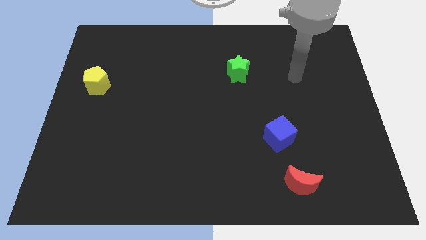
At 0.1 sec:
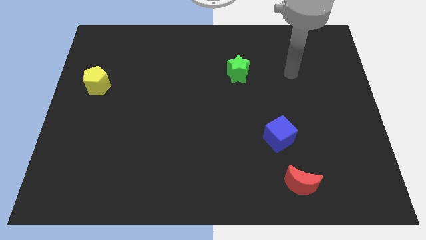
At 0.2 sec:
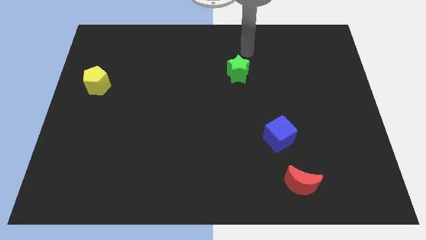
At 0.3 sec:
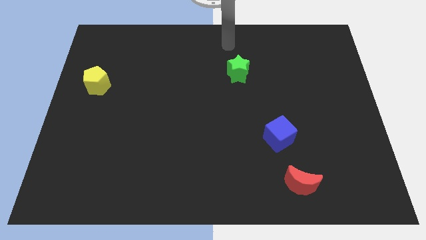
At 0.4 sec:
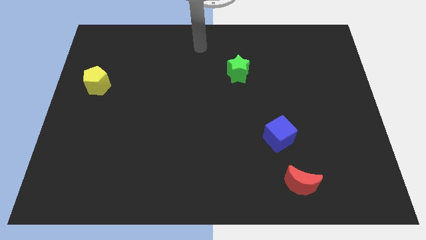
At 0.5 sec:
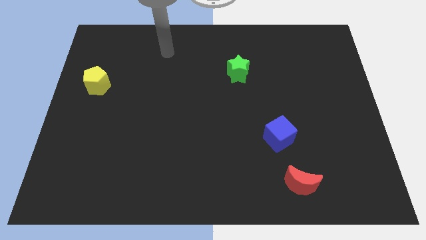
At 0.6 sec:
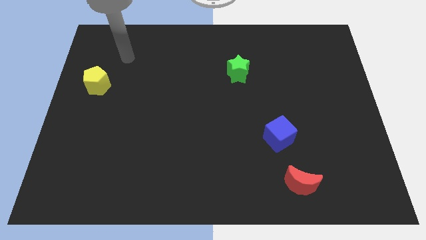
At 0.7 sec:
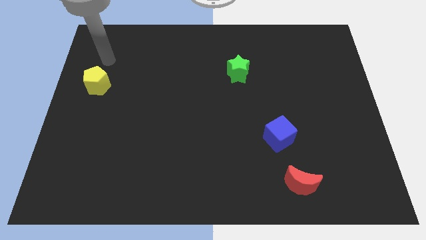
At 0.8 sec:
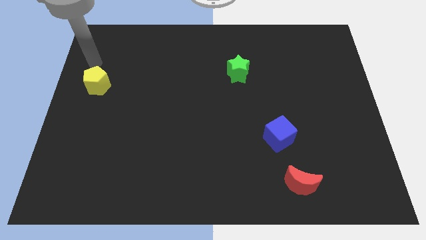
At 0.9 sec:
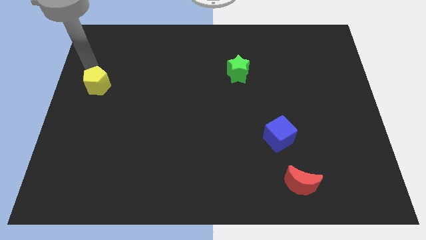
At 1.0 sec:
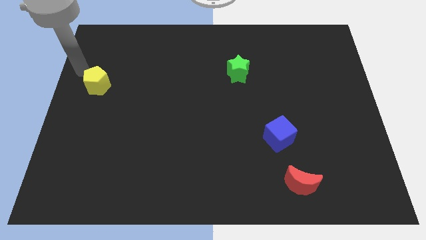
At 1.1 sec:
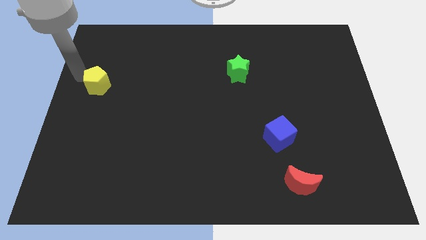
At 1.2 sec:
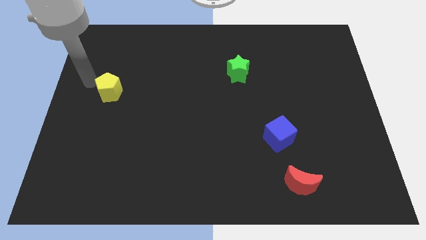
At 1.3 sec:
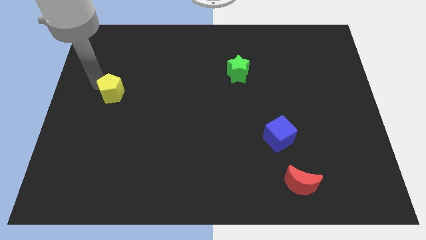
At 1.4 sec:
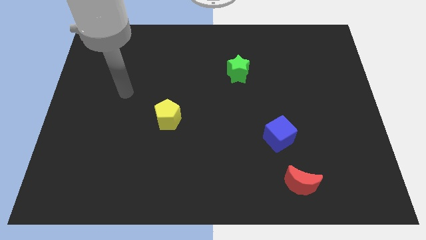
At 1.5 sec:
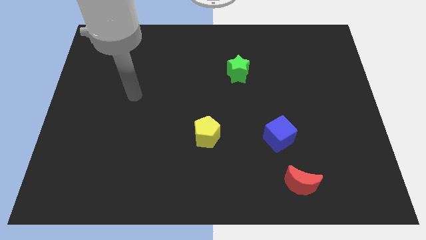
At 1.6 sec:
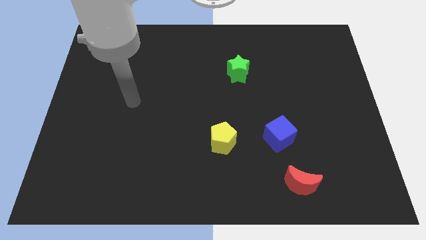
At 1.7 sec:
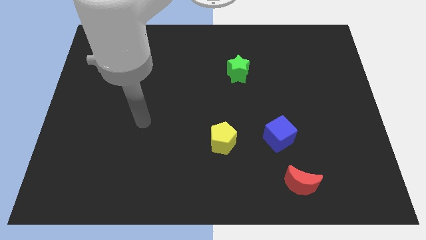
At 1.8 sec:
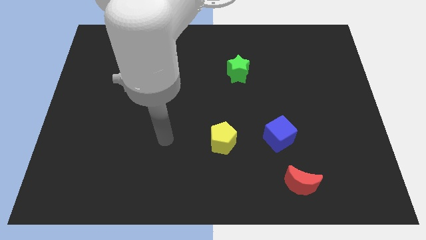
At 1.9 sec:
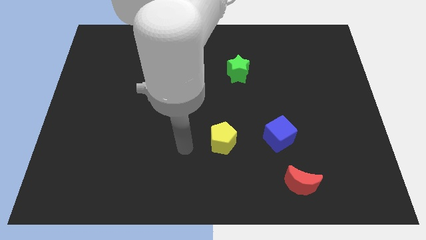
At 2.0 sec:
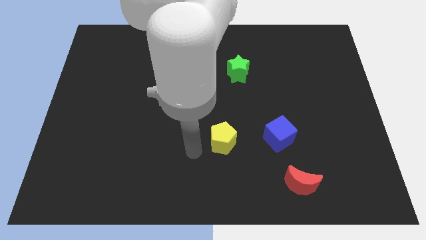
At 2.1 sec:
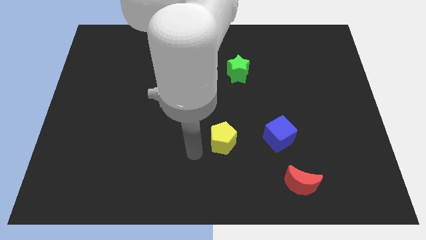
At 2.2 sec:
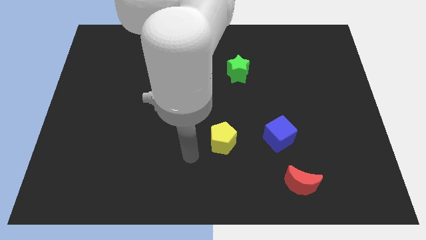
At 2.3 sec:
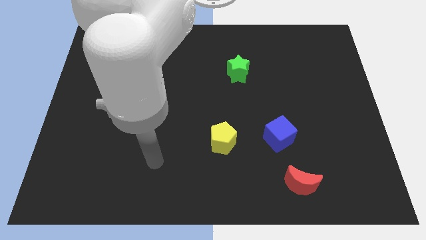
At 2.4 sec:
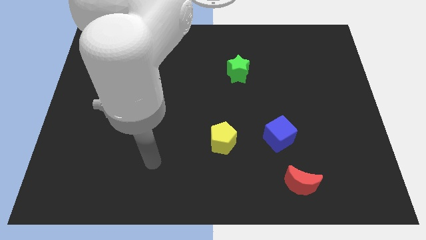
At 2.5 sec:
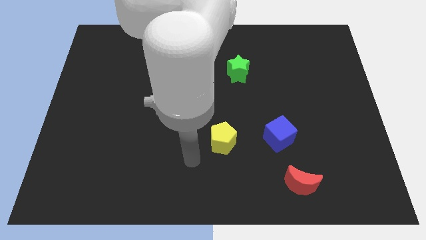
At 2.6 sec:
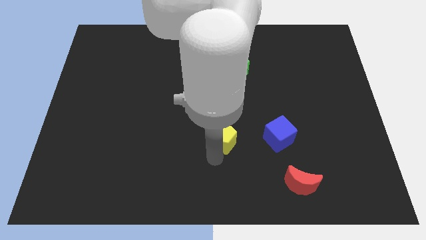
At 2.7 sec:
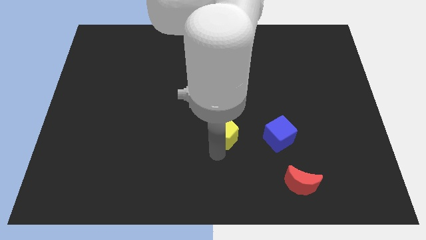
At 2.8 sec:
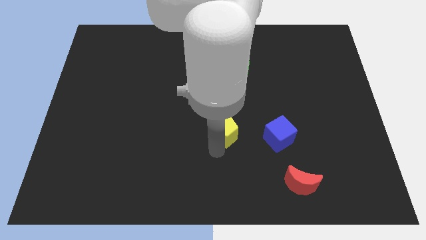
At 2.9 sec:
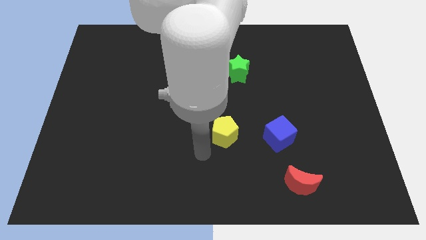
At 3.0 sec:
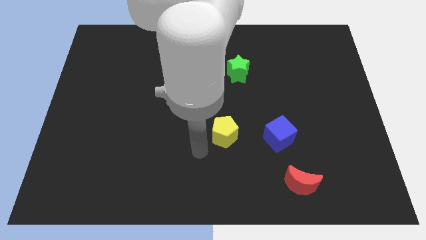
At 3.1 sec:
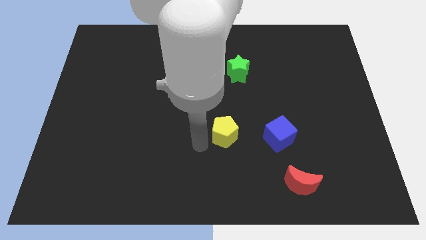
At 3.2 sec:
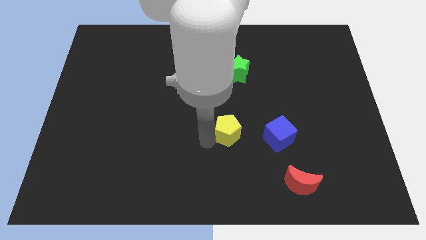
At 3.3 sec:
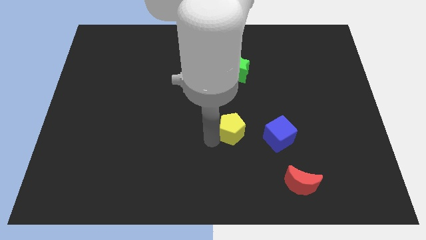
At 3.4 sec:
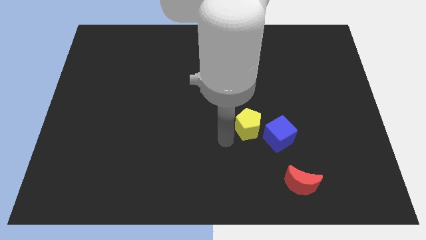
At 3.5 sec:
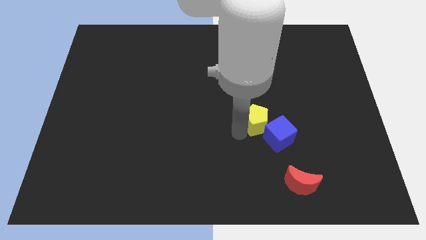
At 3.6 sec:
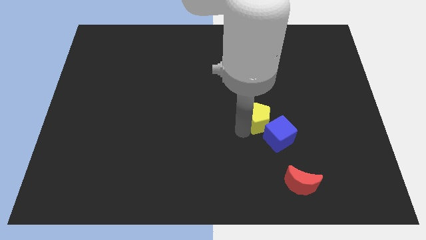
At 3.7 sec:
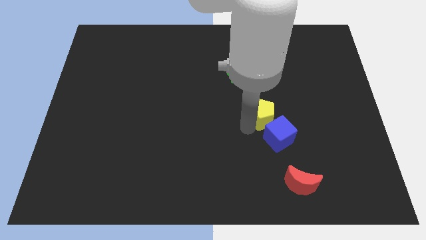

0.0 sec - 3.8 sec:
push the yellow pentagon to the blue block

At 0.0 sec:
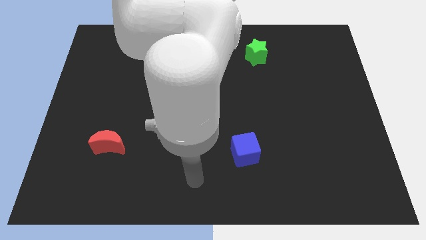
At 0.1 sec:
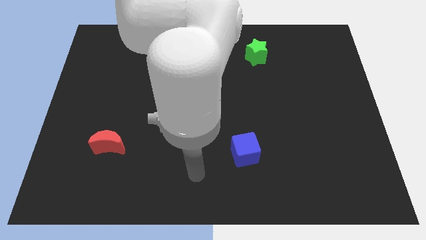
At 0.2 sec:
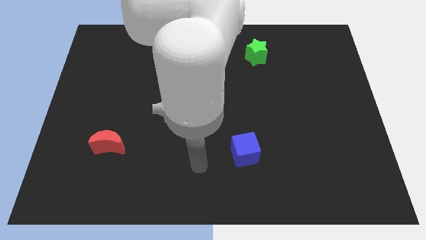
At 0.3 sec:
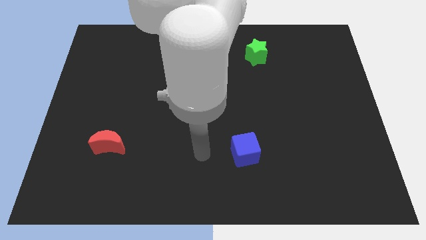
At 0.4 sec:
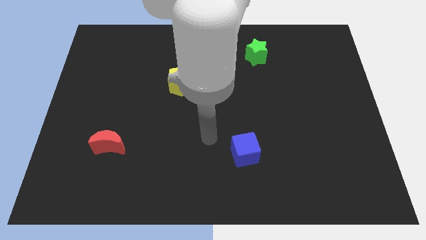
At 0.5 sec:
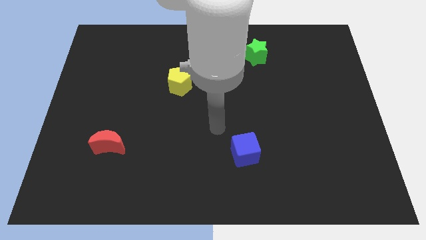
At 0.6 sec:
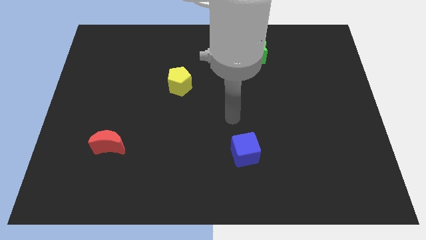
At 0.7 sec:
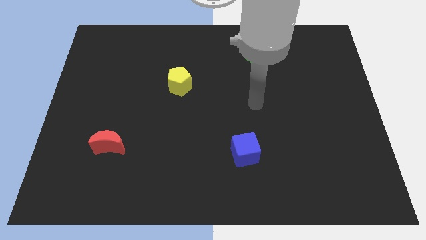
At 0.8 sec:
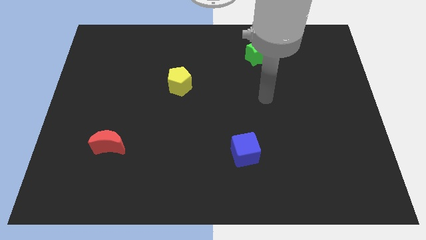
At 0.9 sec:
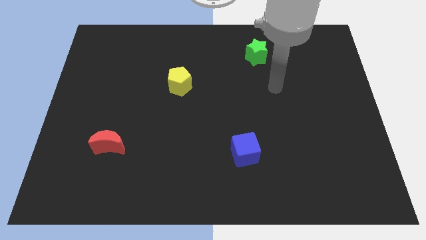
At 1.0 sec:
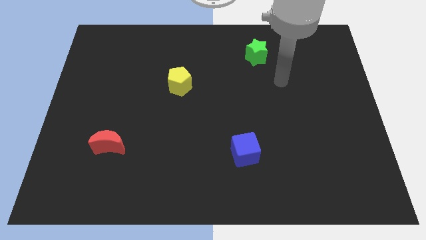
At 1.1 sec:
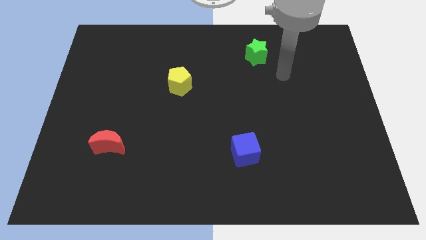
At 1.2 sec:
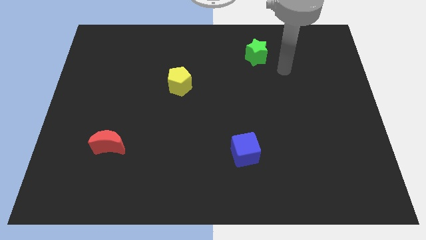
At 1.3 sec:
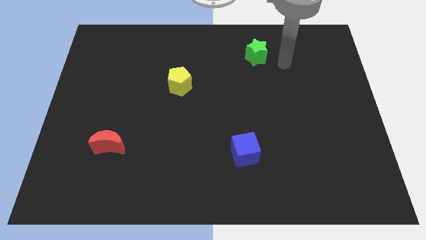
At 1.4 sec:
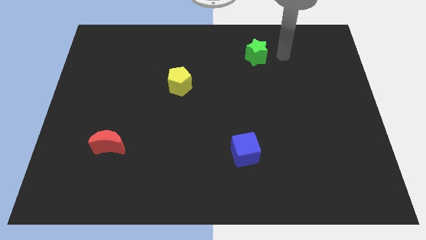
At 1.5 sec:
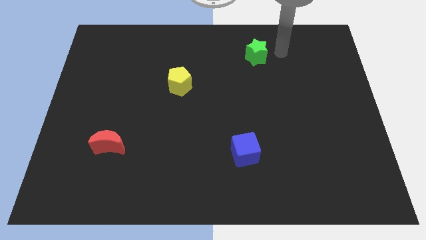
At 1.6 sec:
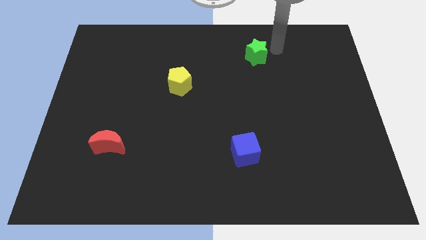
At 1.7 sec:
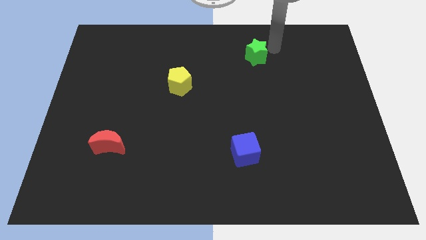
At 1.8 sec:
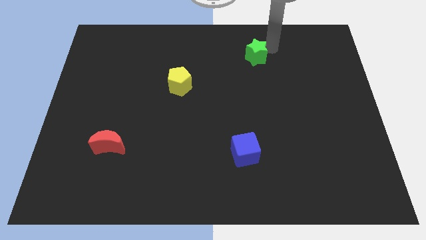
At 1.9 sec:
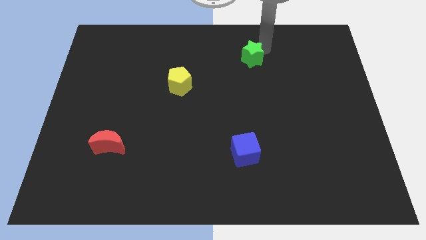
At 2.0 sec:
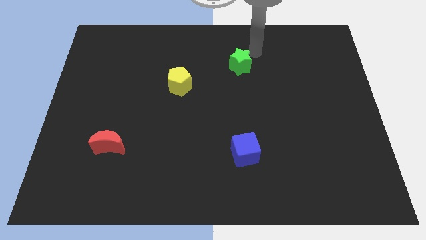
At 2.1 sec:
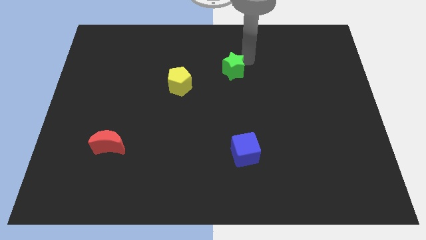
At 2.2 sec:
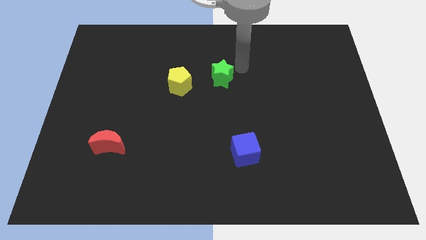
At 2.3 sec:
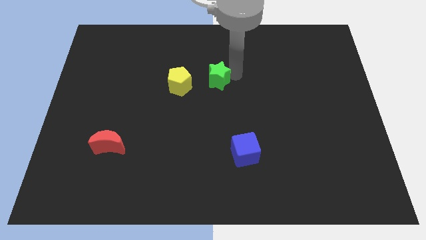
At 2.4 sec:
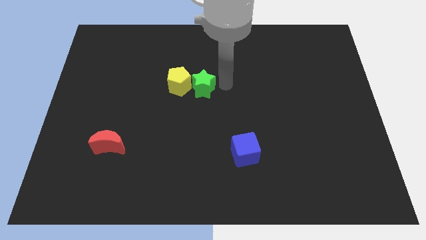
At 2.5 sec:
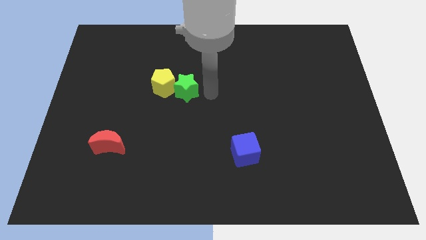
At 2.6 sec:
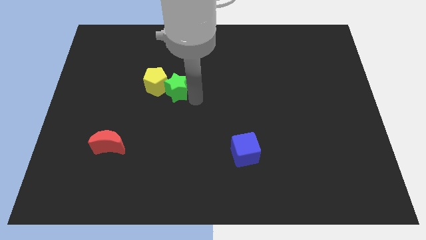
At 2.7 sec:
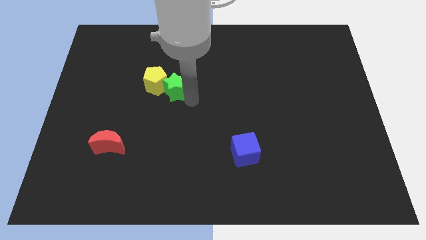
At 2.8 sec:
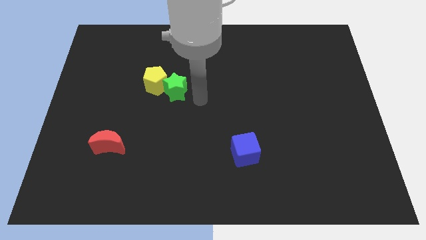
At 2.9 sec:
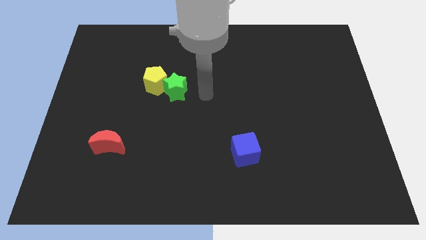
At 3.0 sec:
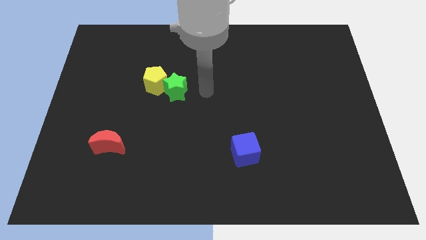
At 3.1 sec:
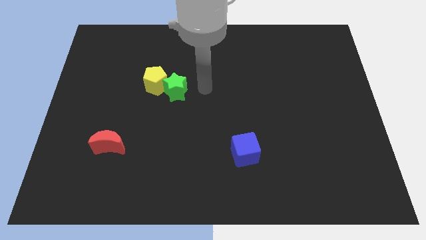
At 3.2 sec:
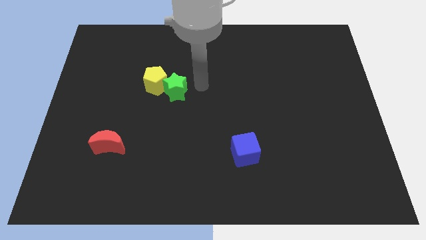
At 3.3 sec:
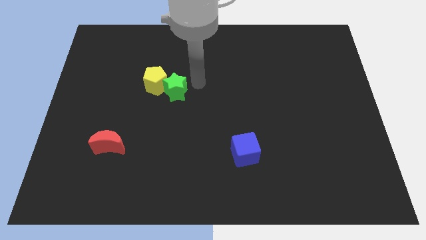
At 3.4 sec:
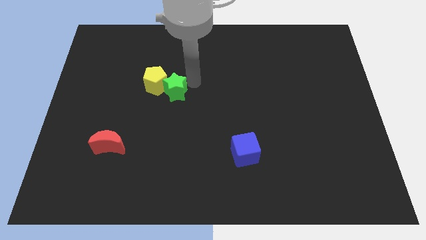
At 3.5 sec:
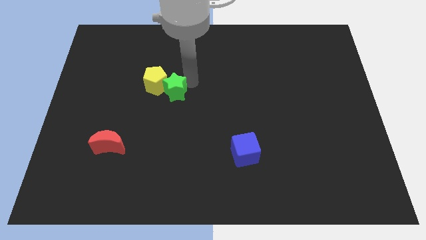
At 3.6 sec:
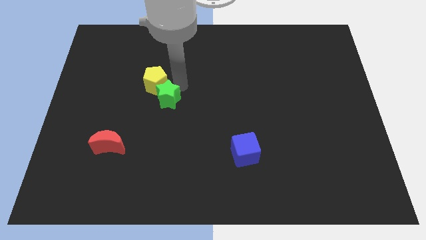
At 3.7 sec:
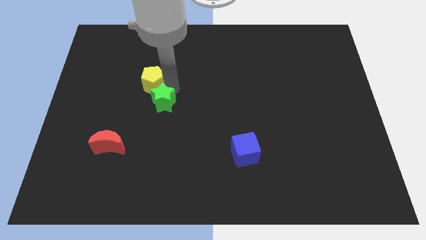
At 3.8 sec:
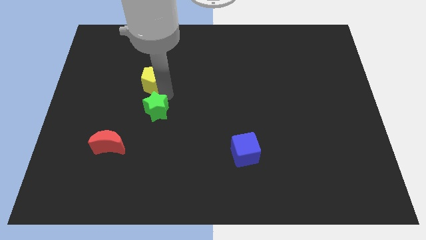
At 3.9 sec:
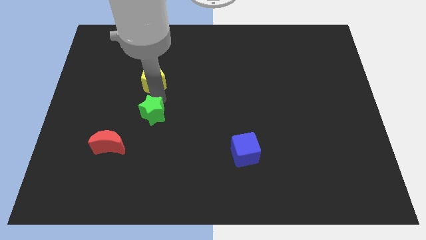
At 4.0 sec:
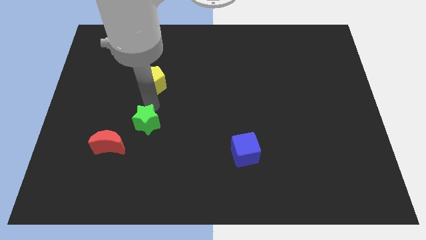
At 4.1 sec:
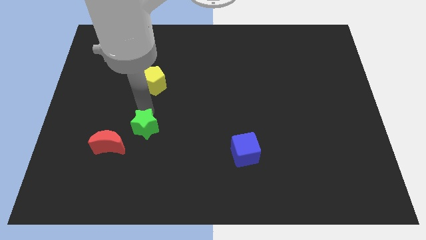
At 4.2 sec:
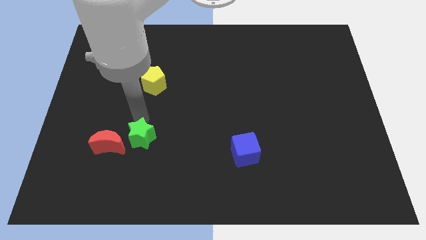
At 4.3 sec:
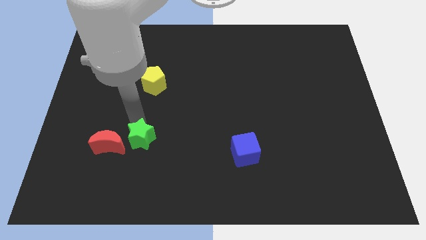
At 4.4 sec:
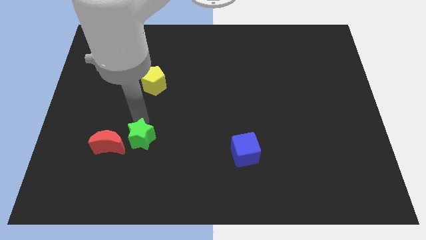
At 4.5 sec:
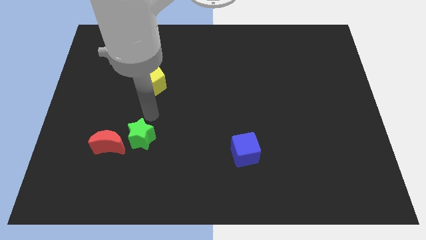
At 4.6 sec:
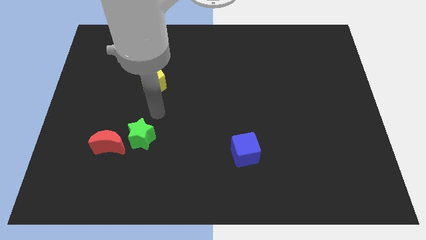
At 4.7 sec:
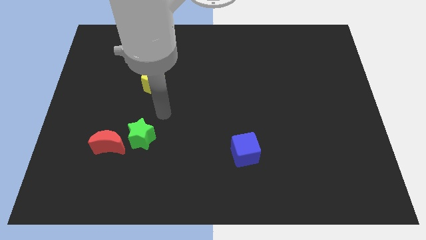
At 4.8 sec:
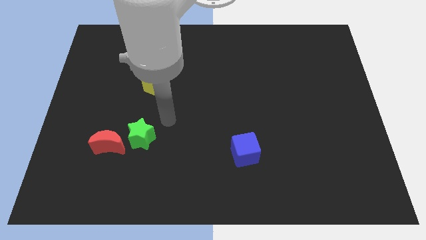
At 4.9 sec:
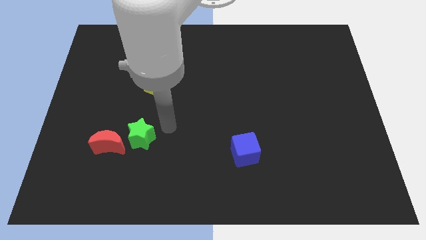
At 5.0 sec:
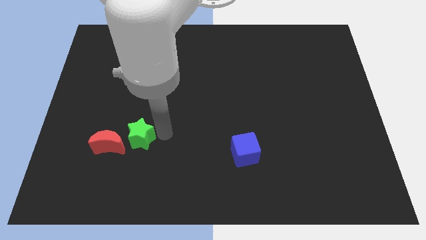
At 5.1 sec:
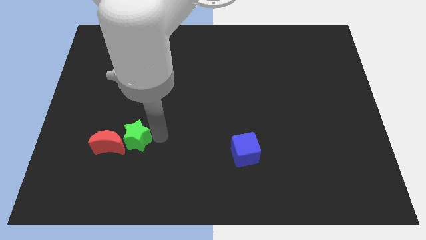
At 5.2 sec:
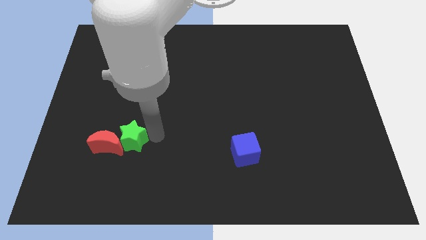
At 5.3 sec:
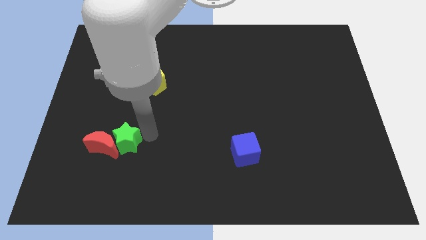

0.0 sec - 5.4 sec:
slide the green star towards the red block
